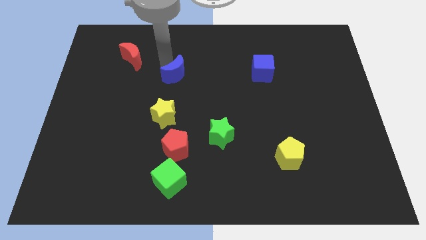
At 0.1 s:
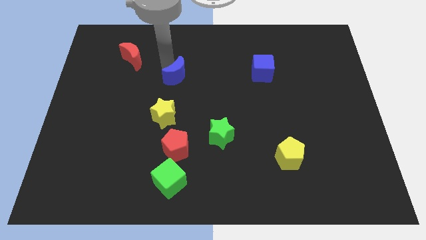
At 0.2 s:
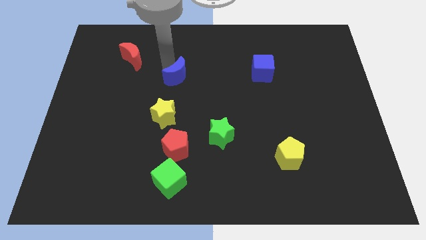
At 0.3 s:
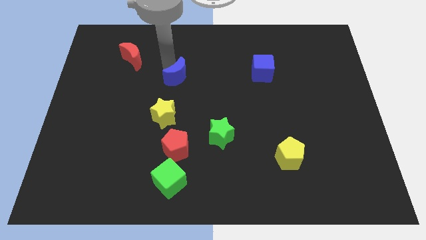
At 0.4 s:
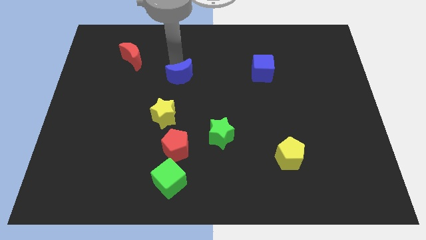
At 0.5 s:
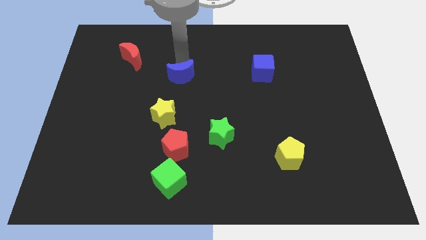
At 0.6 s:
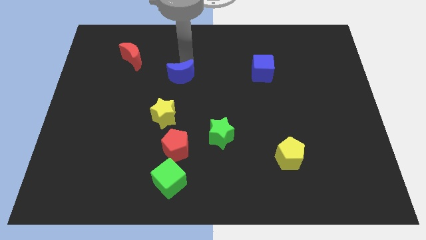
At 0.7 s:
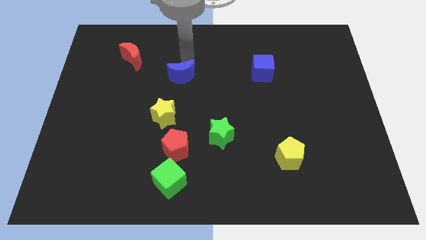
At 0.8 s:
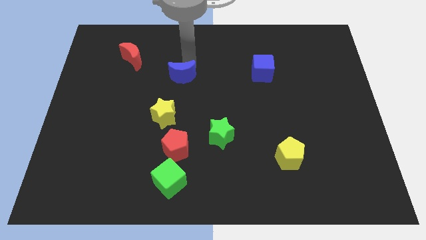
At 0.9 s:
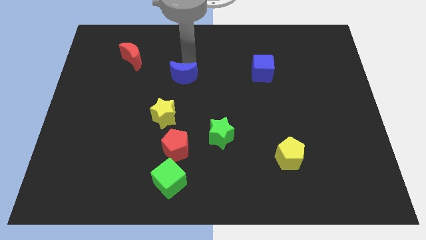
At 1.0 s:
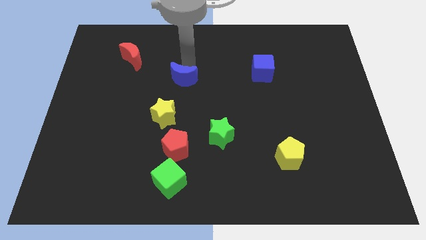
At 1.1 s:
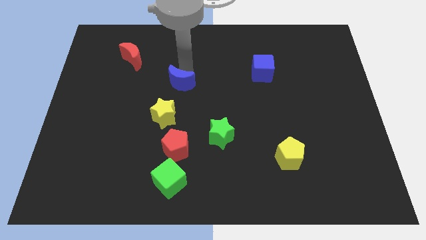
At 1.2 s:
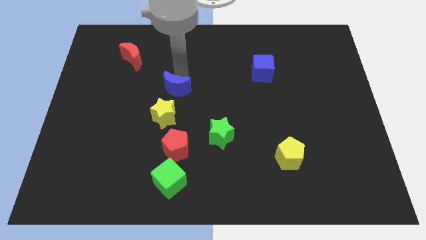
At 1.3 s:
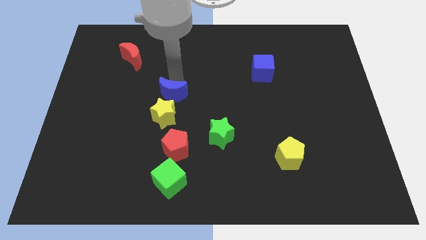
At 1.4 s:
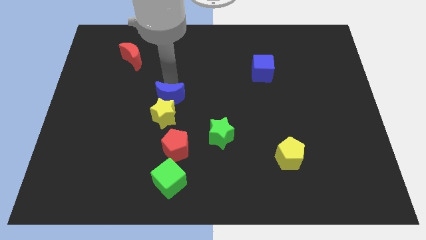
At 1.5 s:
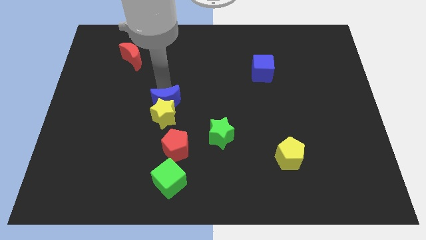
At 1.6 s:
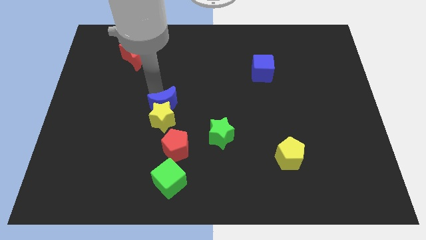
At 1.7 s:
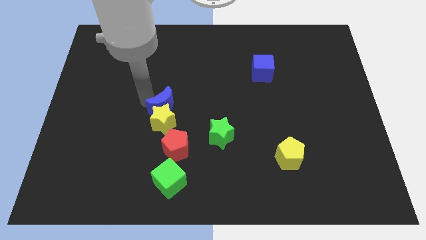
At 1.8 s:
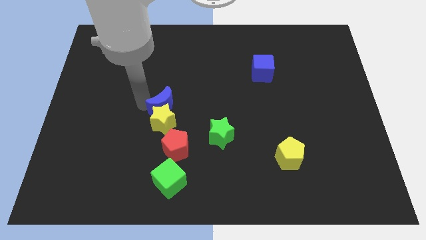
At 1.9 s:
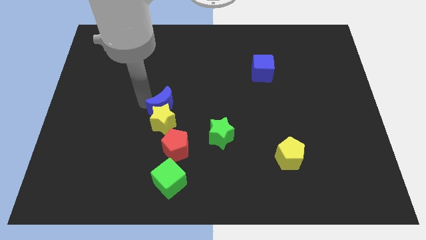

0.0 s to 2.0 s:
put the blue moon diagonally bottom left to the blue cube

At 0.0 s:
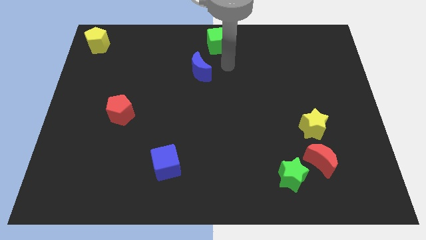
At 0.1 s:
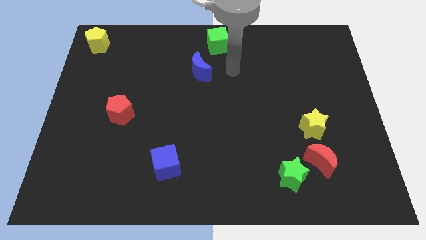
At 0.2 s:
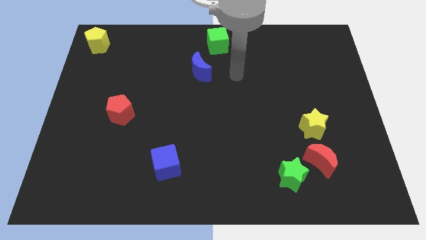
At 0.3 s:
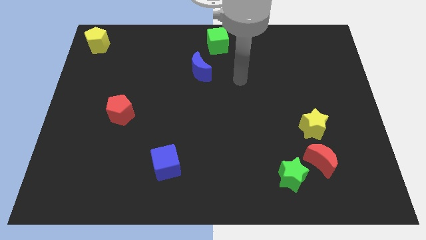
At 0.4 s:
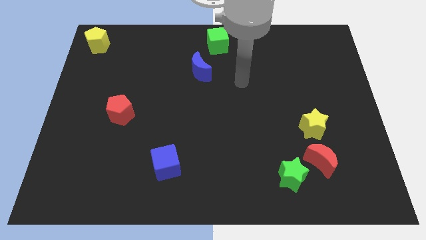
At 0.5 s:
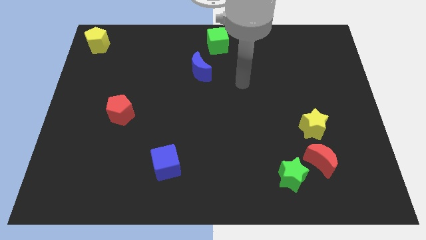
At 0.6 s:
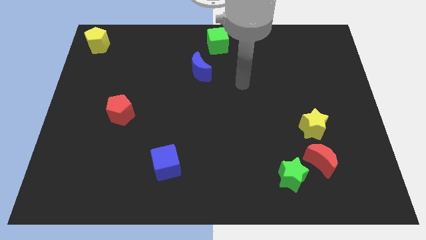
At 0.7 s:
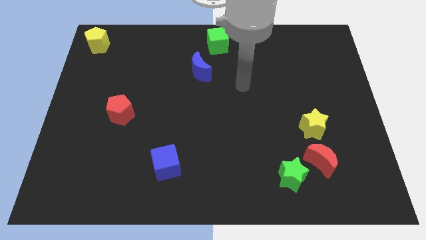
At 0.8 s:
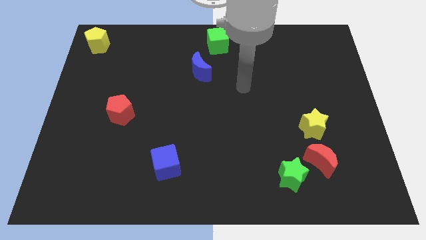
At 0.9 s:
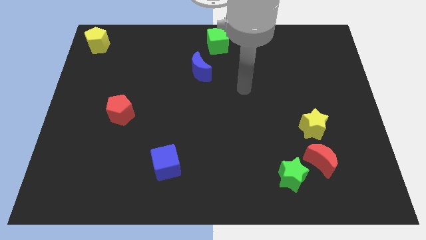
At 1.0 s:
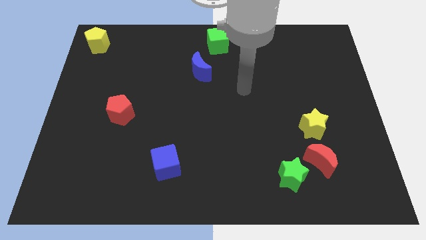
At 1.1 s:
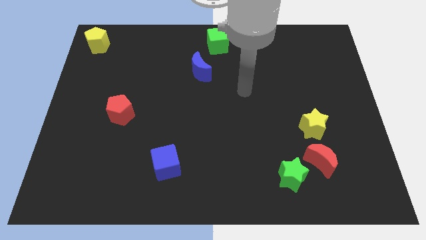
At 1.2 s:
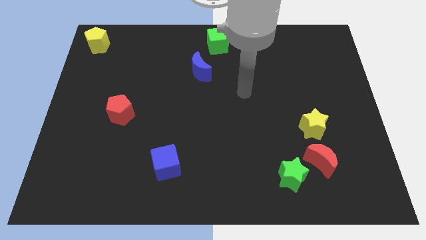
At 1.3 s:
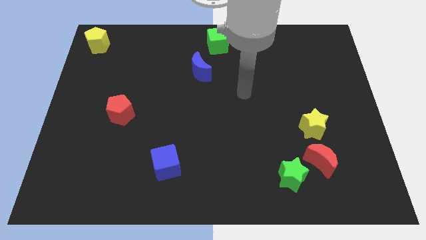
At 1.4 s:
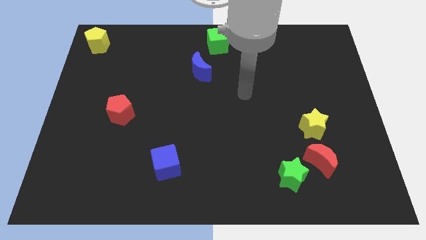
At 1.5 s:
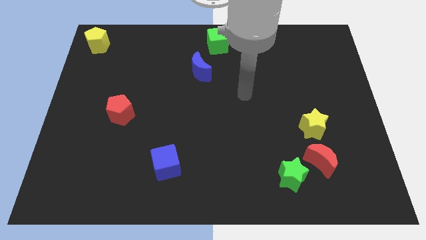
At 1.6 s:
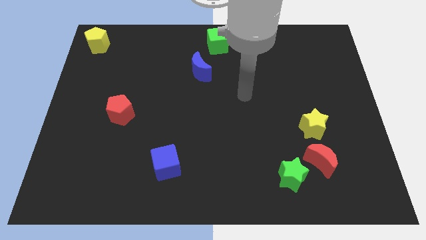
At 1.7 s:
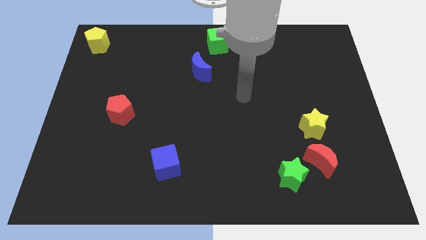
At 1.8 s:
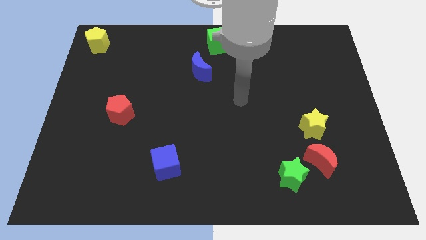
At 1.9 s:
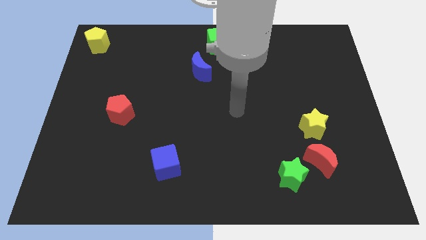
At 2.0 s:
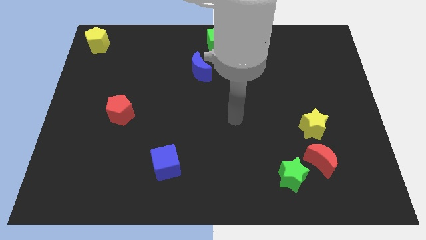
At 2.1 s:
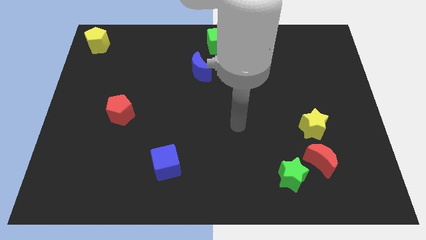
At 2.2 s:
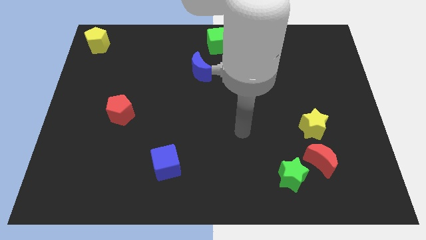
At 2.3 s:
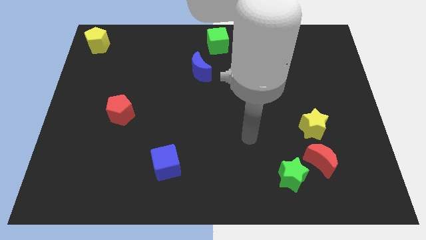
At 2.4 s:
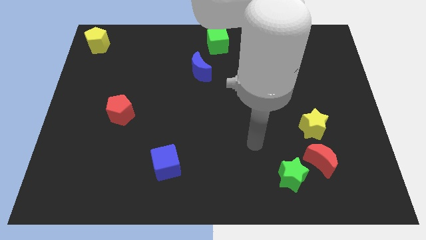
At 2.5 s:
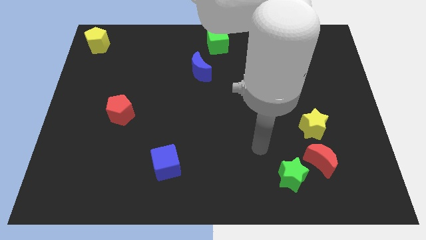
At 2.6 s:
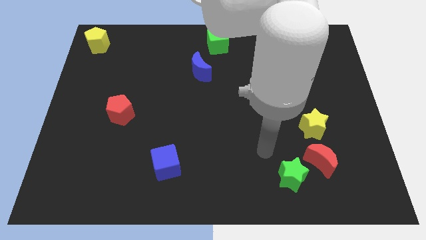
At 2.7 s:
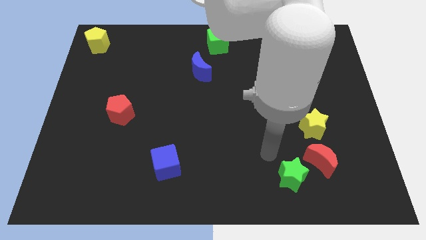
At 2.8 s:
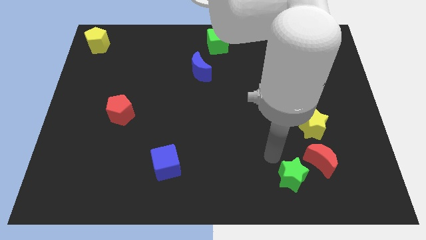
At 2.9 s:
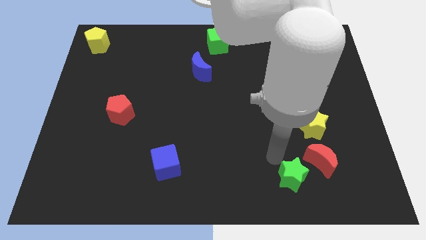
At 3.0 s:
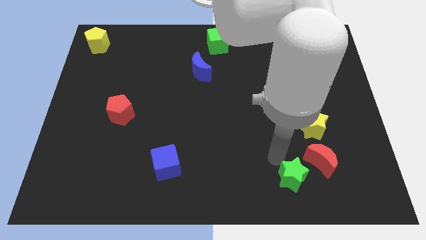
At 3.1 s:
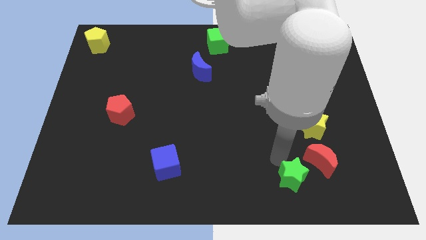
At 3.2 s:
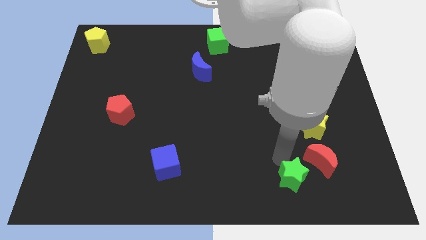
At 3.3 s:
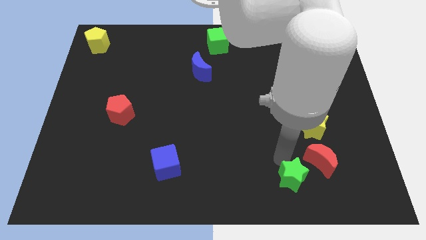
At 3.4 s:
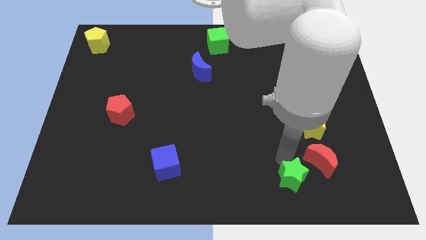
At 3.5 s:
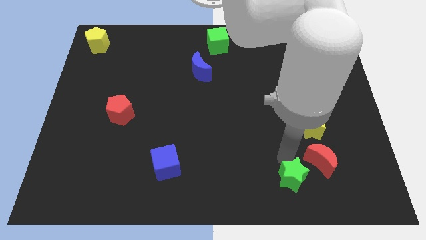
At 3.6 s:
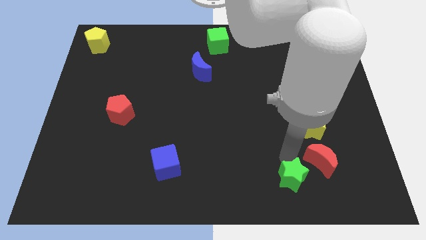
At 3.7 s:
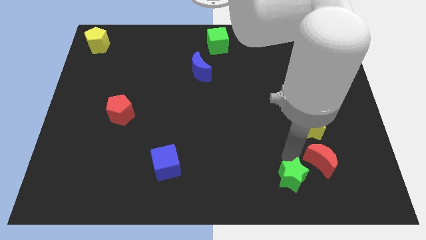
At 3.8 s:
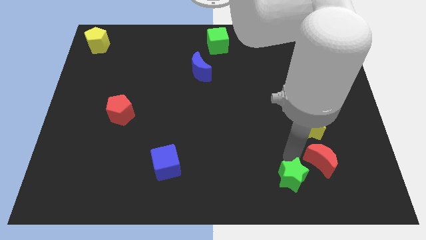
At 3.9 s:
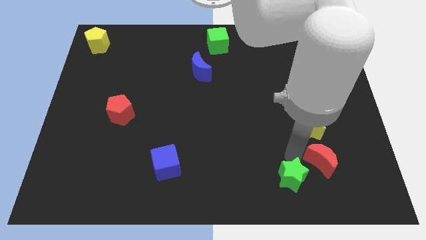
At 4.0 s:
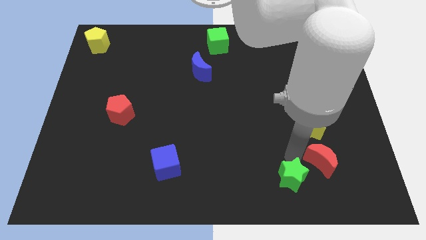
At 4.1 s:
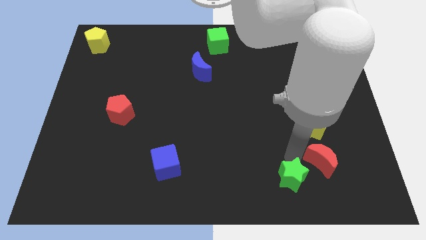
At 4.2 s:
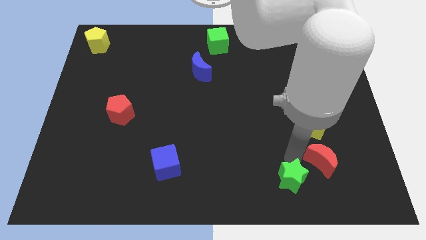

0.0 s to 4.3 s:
move your arm away from the green cube

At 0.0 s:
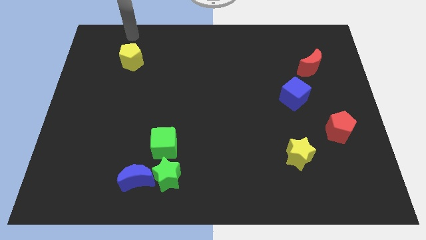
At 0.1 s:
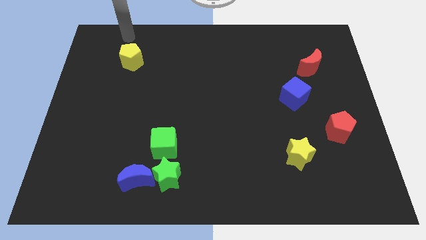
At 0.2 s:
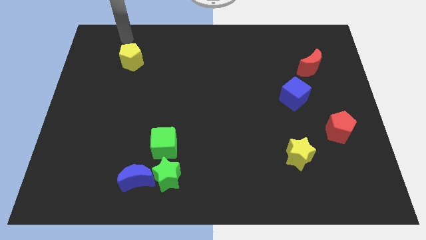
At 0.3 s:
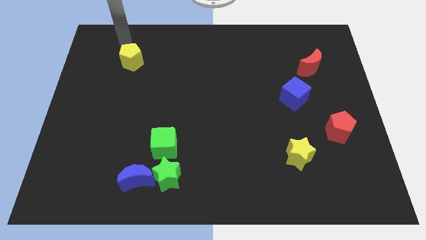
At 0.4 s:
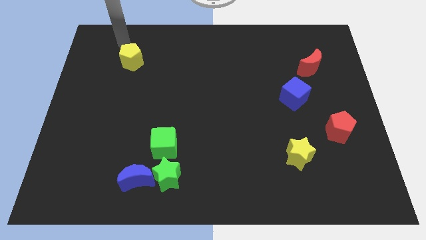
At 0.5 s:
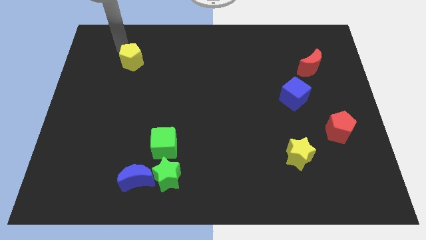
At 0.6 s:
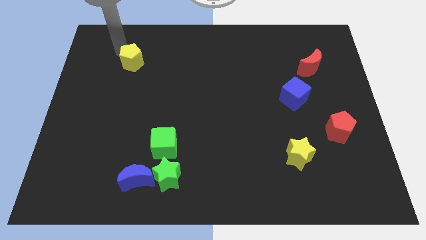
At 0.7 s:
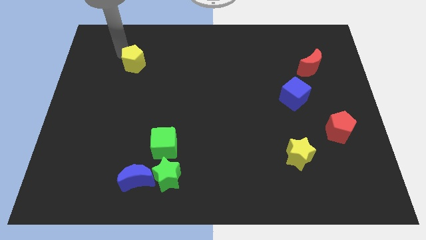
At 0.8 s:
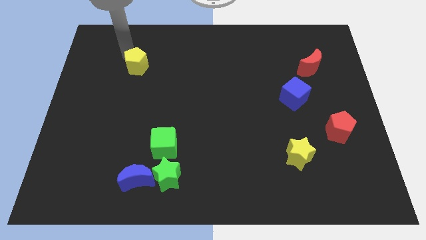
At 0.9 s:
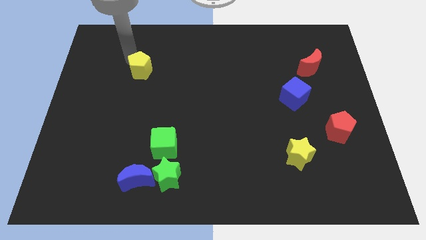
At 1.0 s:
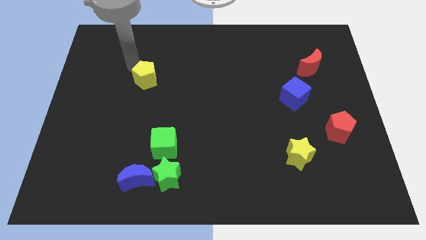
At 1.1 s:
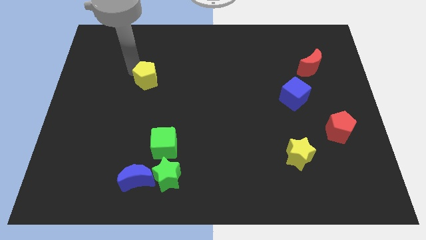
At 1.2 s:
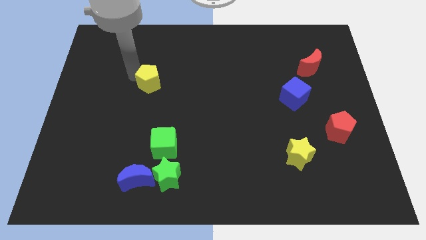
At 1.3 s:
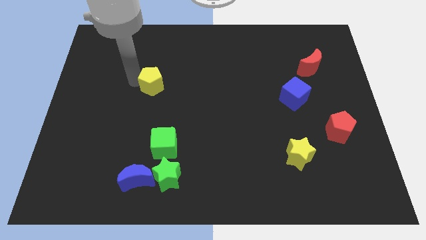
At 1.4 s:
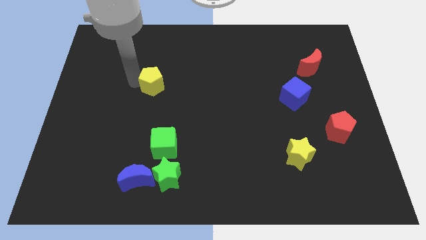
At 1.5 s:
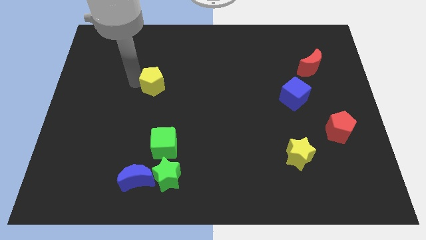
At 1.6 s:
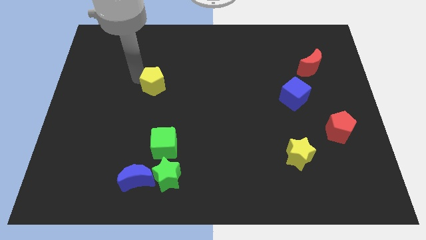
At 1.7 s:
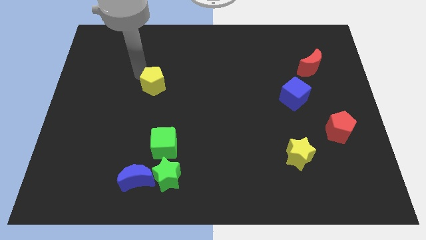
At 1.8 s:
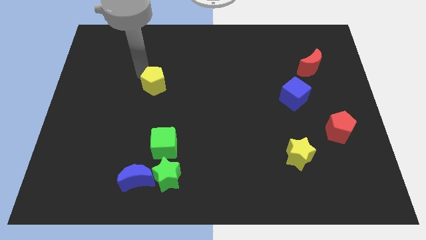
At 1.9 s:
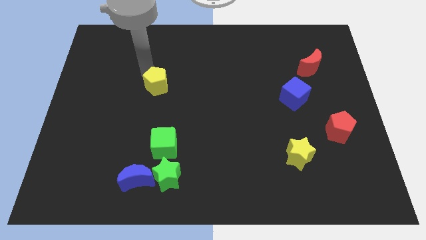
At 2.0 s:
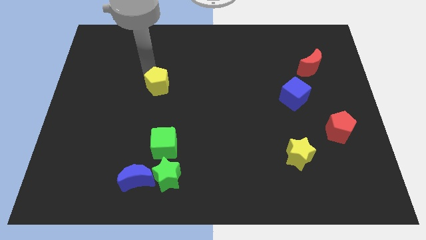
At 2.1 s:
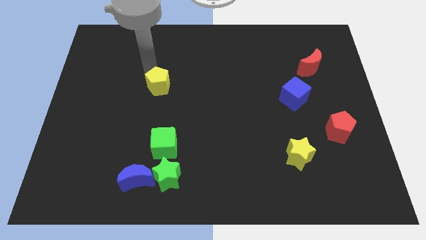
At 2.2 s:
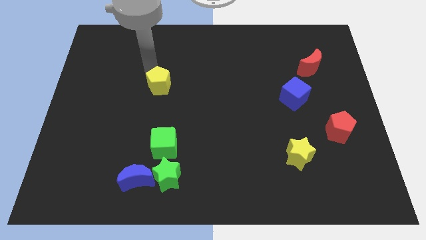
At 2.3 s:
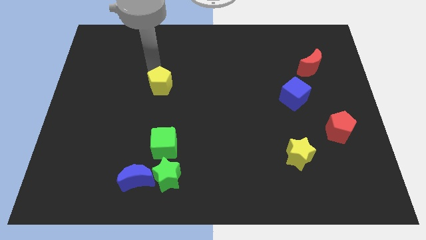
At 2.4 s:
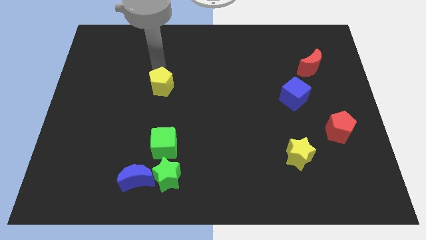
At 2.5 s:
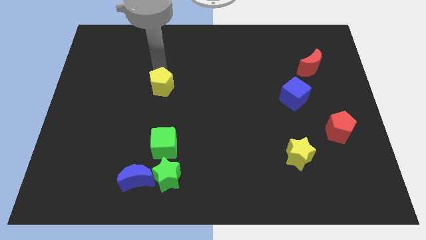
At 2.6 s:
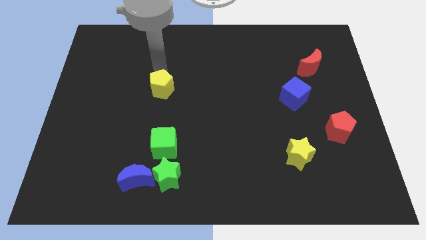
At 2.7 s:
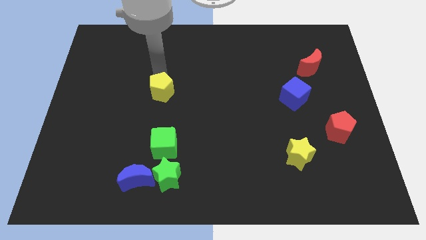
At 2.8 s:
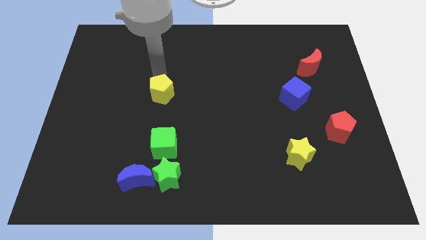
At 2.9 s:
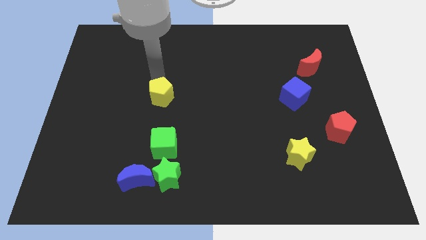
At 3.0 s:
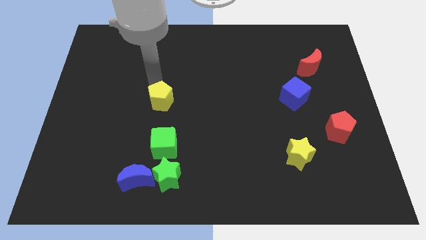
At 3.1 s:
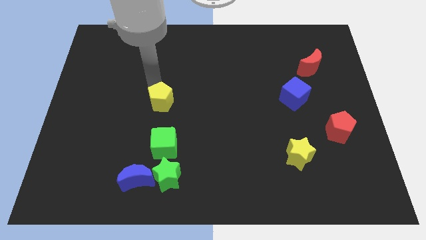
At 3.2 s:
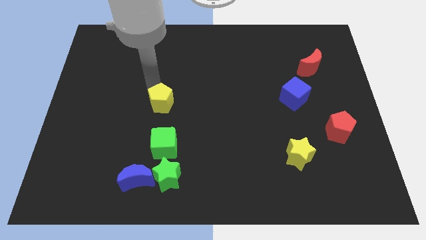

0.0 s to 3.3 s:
place the yellow pentagon above the green cube
